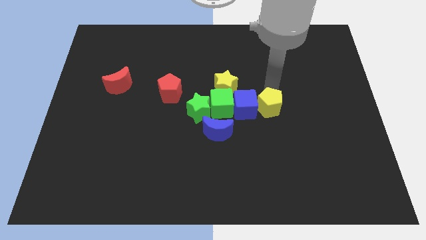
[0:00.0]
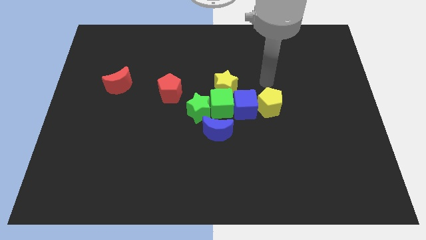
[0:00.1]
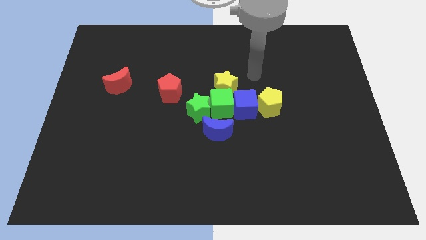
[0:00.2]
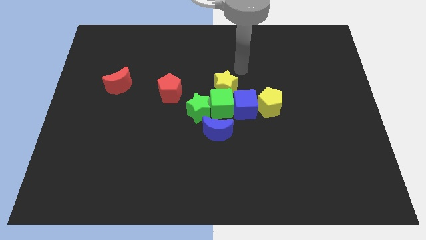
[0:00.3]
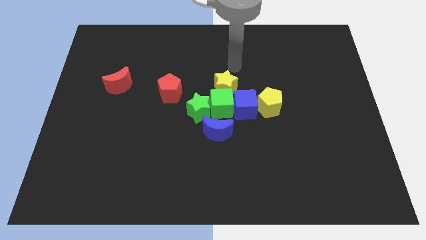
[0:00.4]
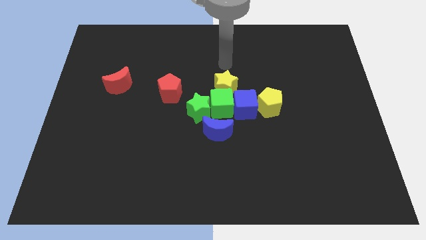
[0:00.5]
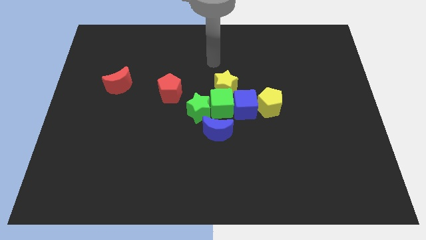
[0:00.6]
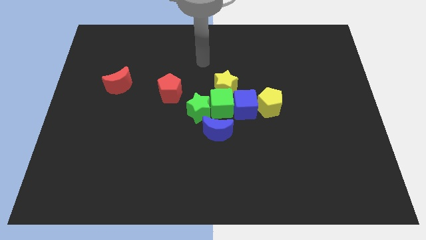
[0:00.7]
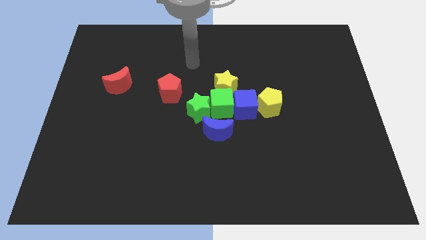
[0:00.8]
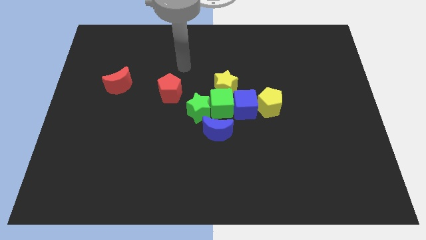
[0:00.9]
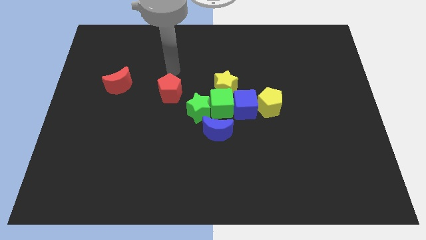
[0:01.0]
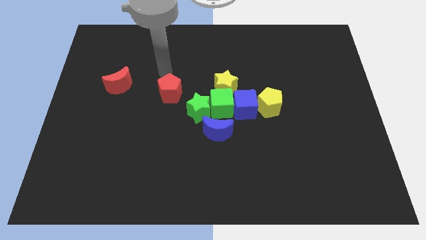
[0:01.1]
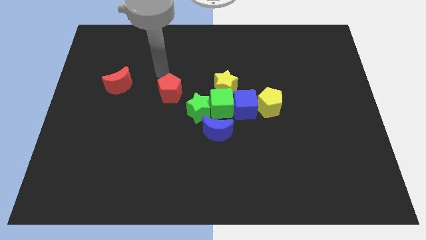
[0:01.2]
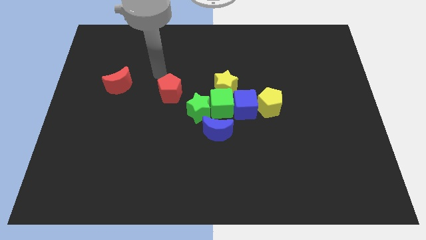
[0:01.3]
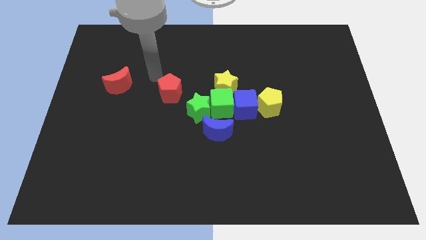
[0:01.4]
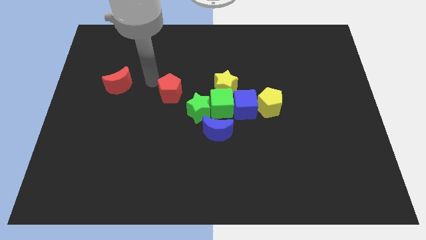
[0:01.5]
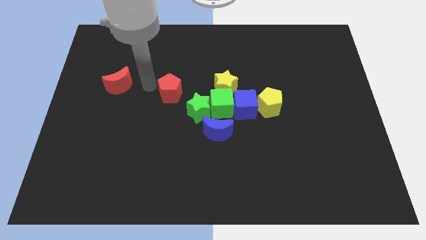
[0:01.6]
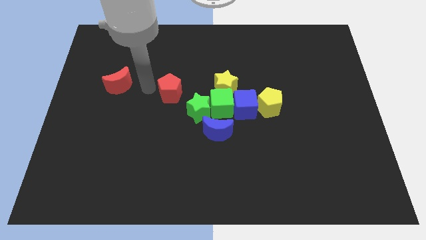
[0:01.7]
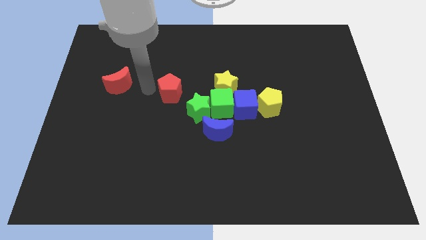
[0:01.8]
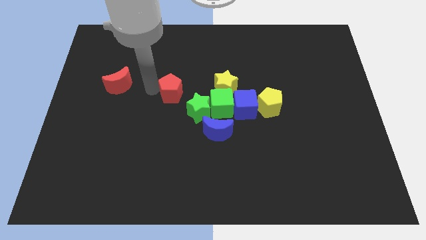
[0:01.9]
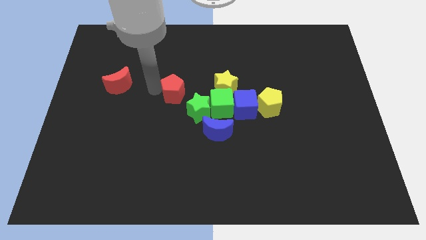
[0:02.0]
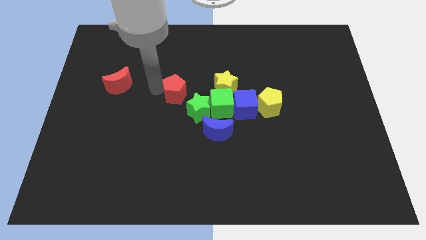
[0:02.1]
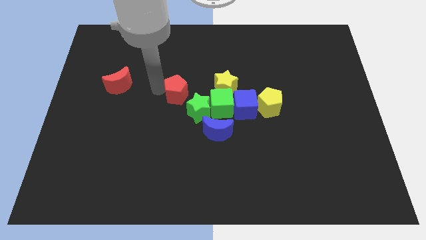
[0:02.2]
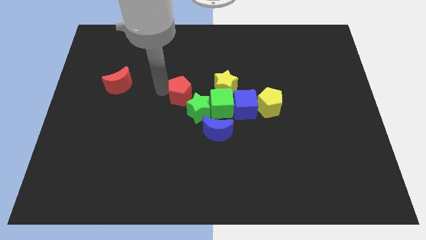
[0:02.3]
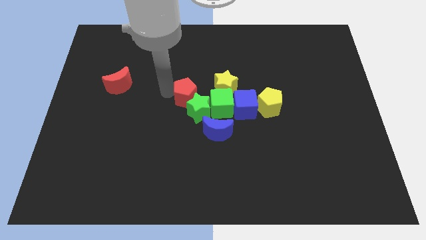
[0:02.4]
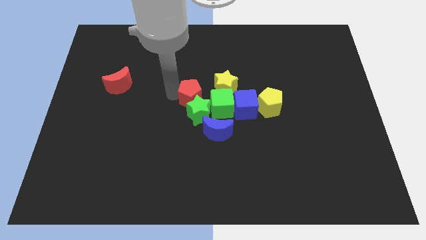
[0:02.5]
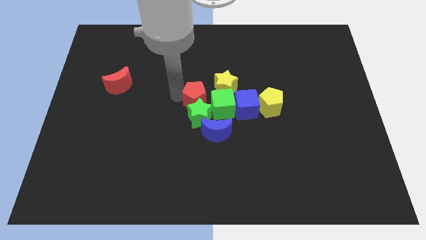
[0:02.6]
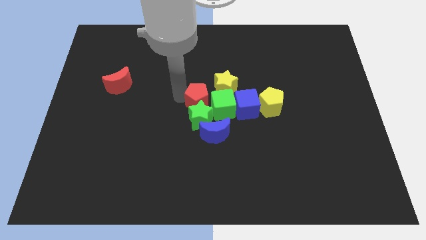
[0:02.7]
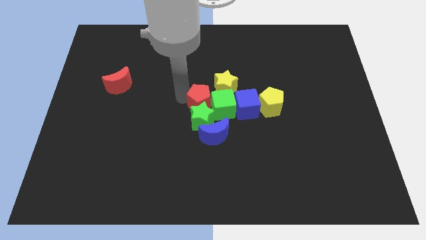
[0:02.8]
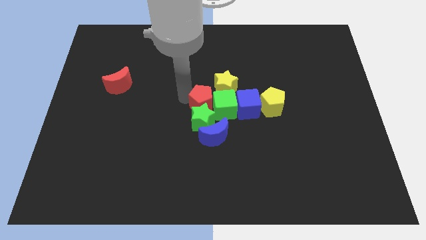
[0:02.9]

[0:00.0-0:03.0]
move the red pentagon to the top of the green star

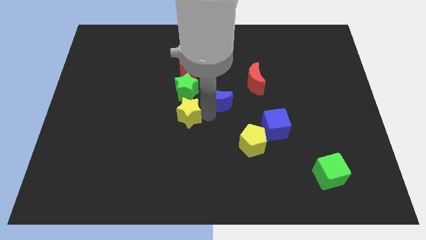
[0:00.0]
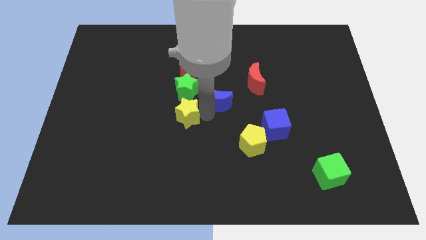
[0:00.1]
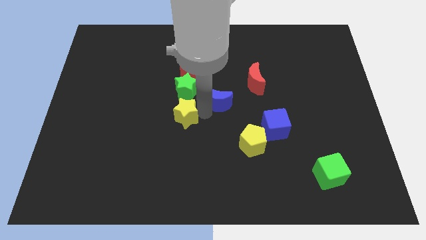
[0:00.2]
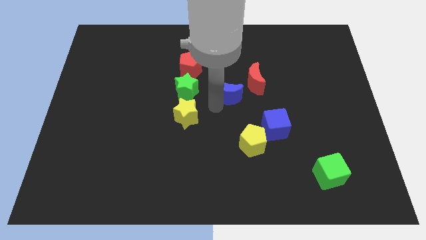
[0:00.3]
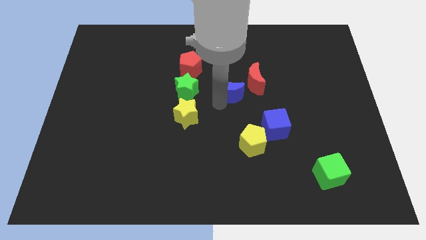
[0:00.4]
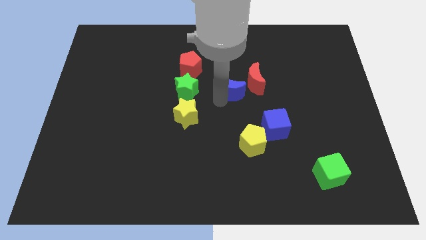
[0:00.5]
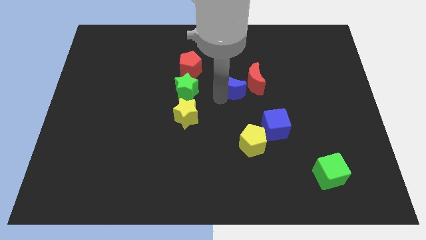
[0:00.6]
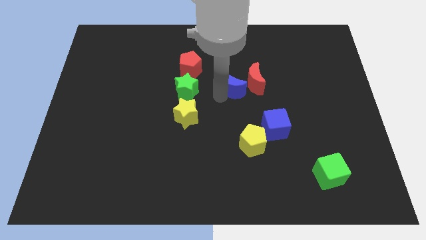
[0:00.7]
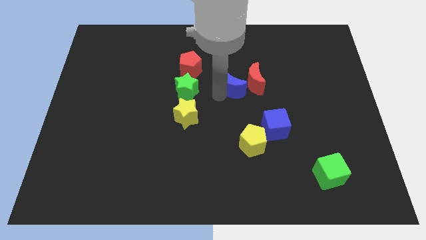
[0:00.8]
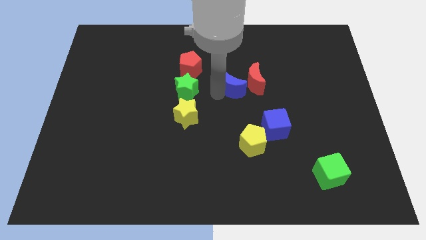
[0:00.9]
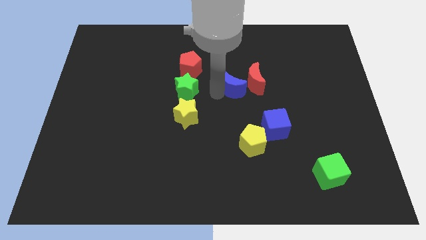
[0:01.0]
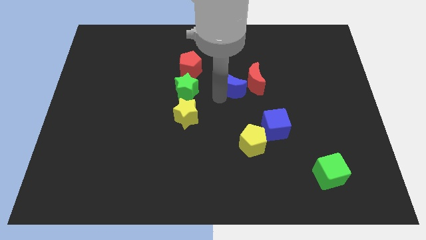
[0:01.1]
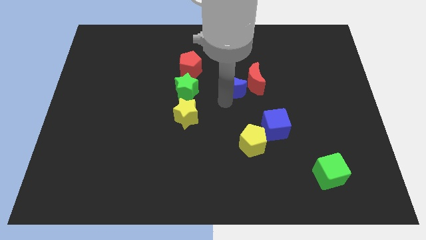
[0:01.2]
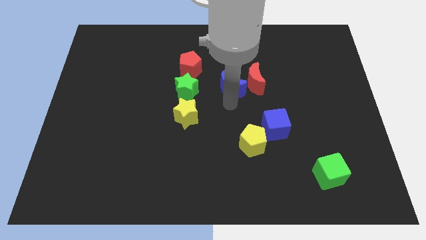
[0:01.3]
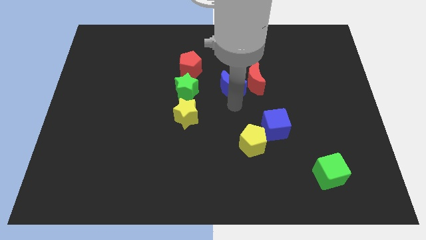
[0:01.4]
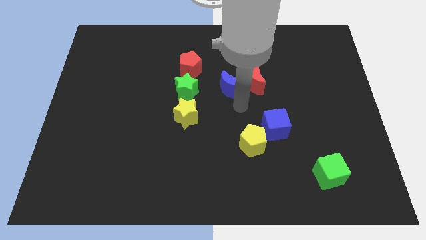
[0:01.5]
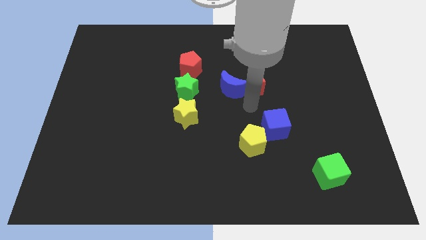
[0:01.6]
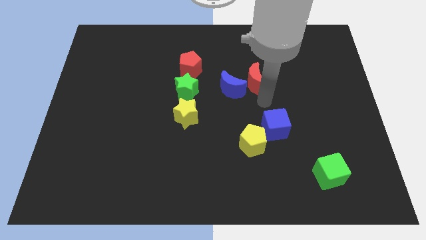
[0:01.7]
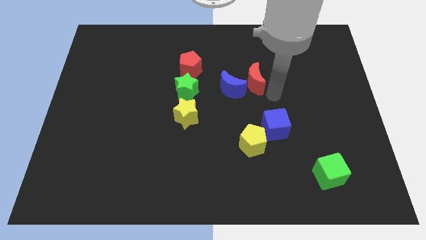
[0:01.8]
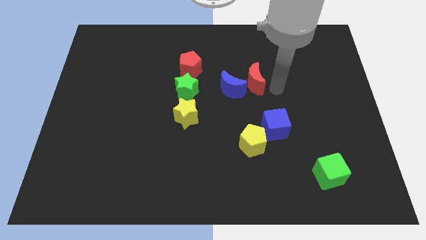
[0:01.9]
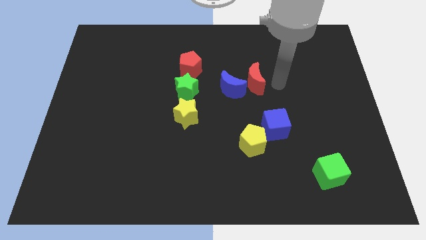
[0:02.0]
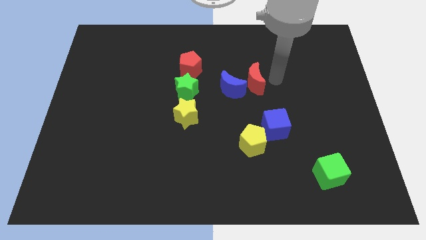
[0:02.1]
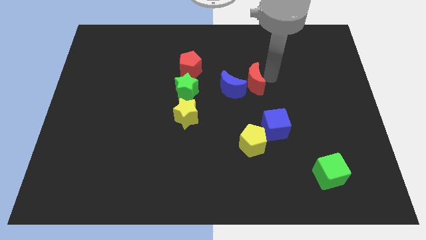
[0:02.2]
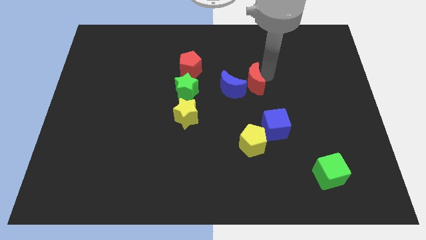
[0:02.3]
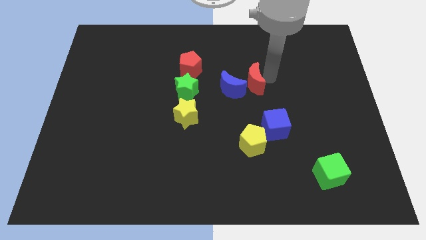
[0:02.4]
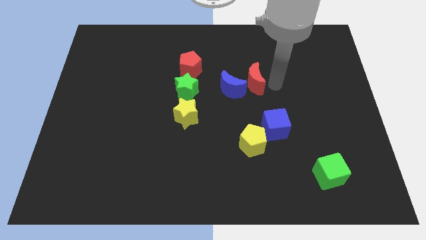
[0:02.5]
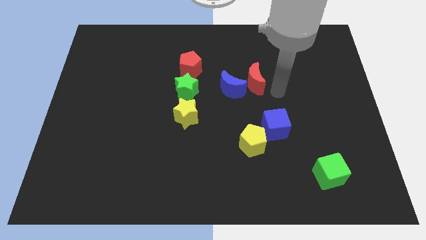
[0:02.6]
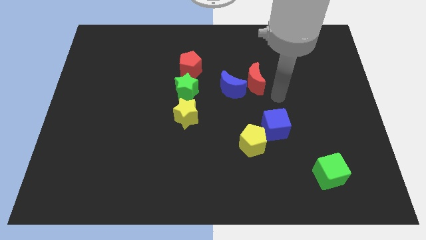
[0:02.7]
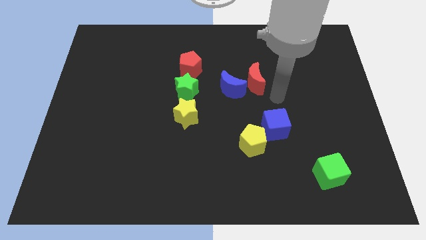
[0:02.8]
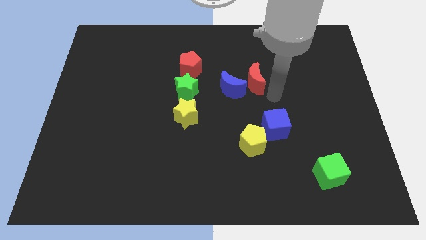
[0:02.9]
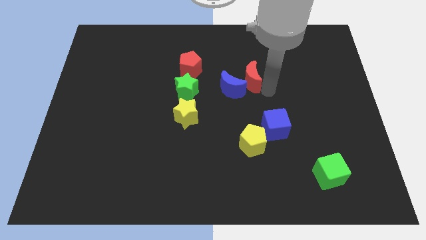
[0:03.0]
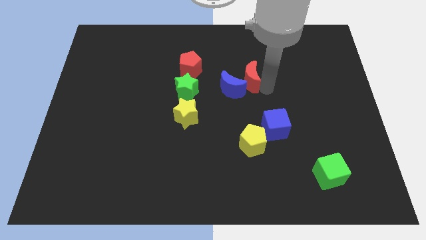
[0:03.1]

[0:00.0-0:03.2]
put the blue crescent to the red moon

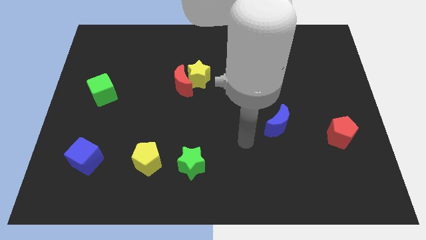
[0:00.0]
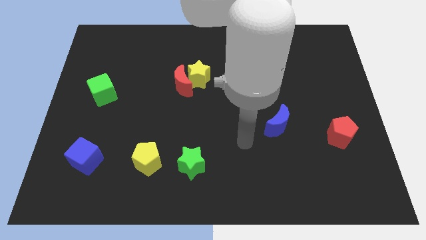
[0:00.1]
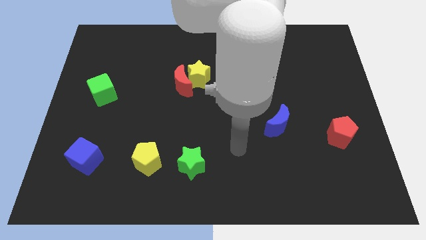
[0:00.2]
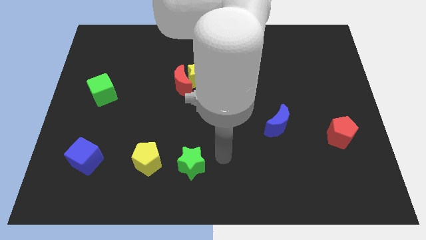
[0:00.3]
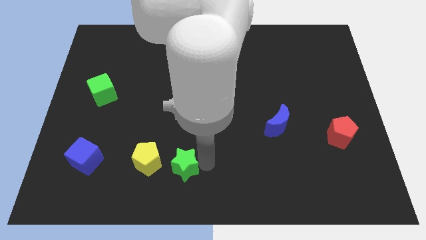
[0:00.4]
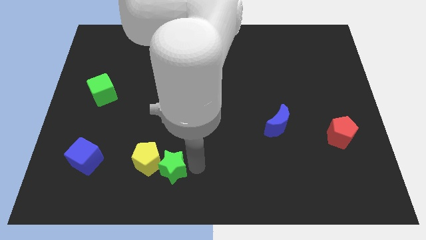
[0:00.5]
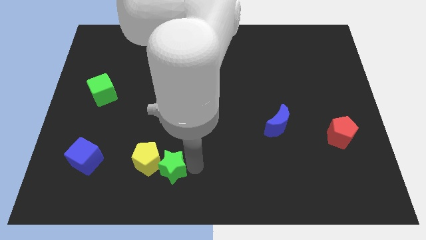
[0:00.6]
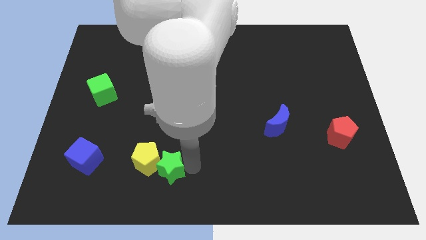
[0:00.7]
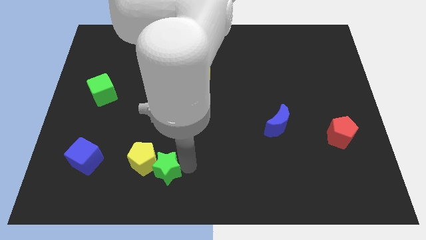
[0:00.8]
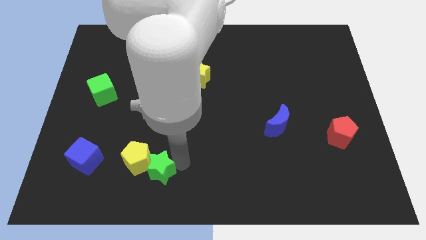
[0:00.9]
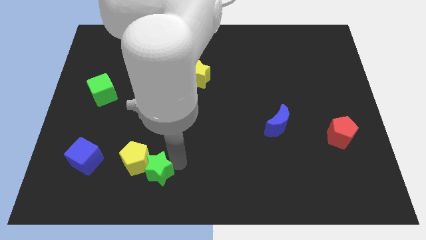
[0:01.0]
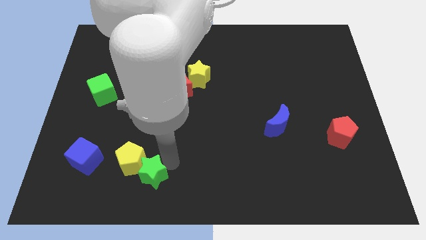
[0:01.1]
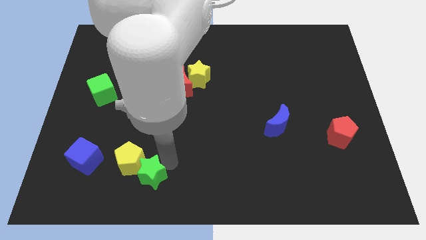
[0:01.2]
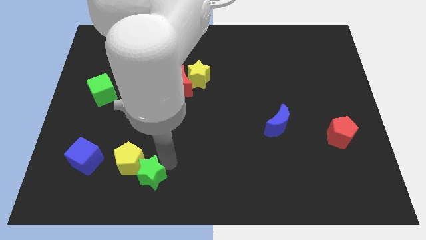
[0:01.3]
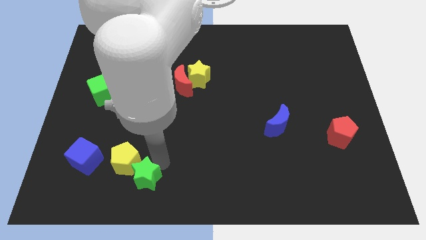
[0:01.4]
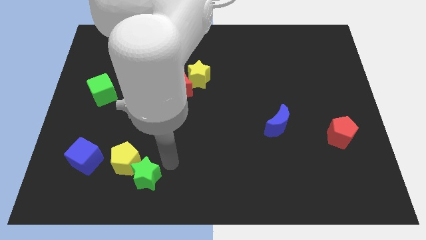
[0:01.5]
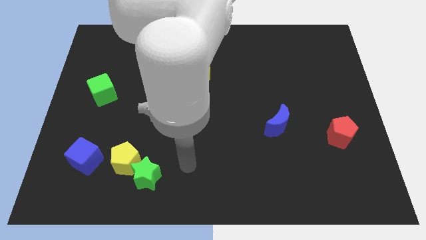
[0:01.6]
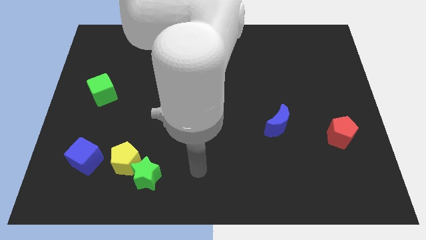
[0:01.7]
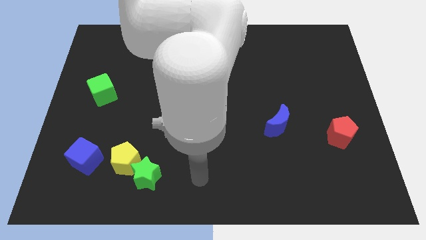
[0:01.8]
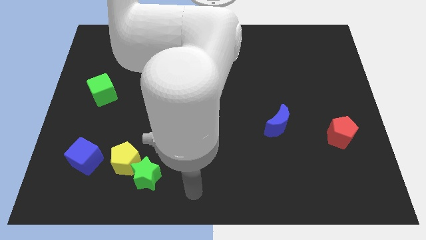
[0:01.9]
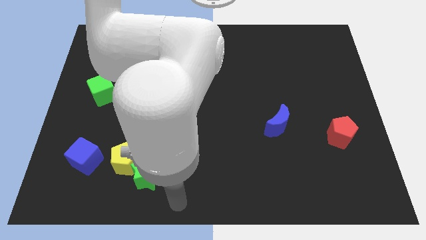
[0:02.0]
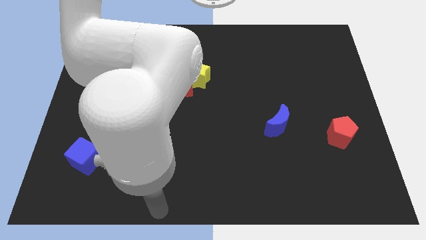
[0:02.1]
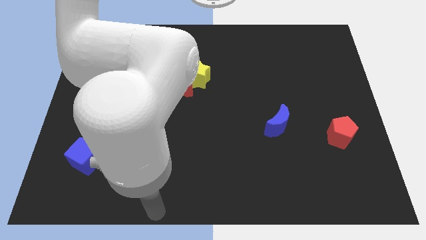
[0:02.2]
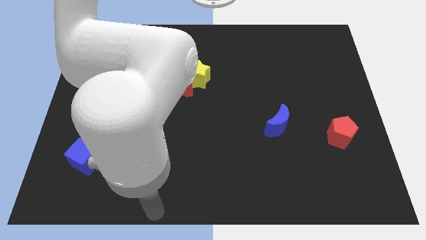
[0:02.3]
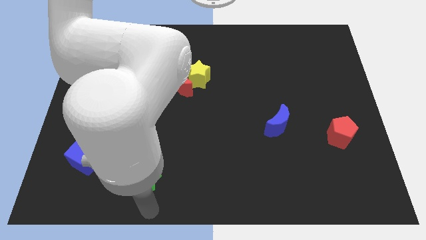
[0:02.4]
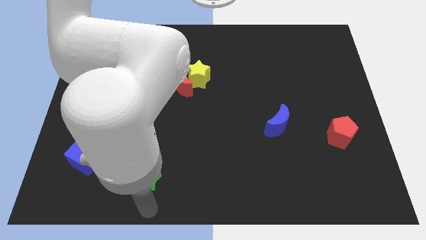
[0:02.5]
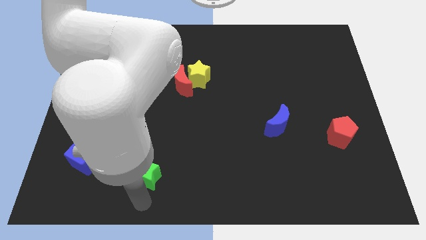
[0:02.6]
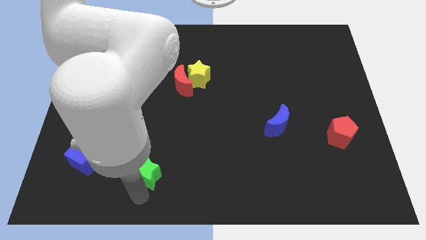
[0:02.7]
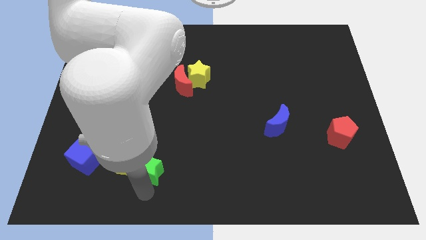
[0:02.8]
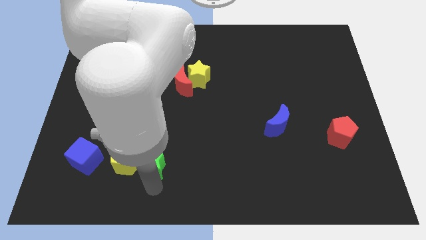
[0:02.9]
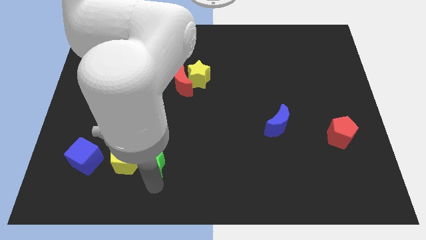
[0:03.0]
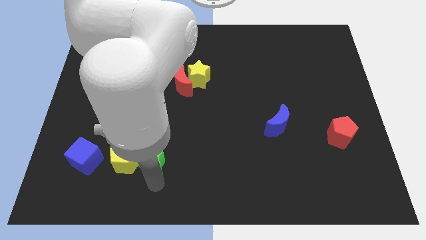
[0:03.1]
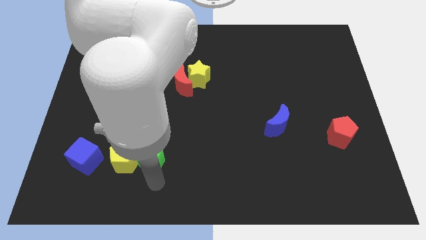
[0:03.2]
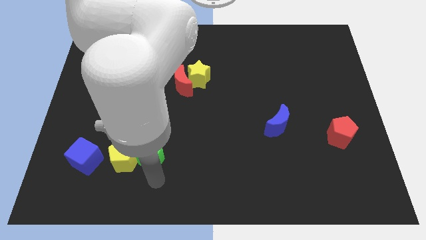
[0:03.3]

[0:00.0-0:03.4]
push the green star into the yellow pentagon
